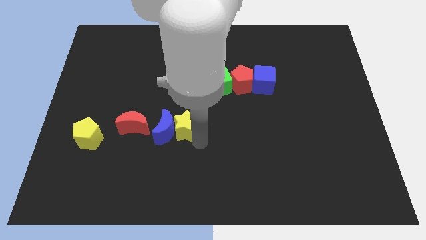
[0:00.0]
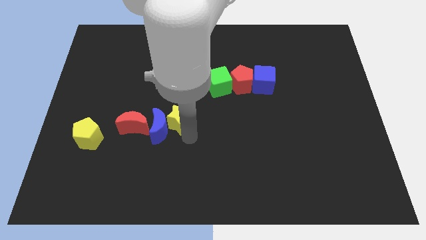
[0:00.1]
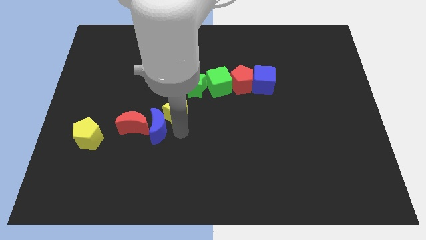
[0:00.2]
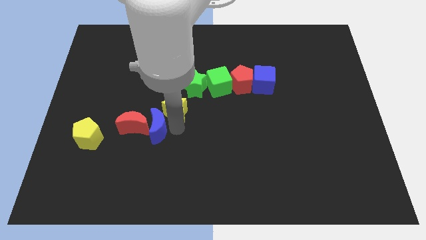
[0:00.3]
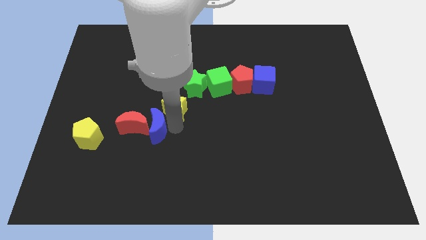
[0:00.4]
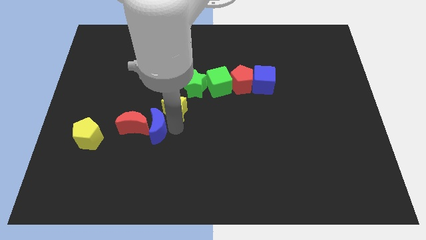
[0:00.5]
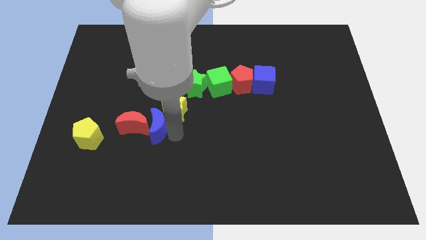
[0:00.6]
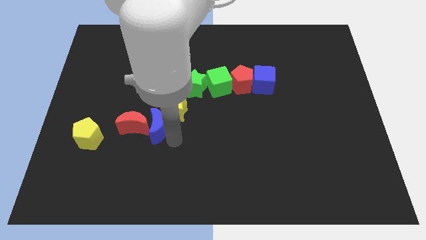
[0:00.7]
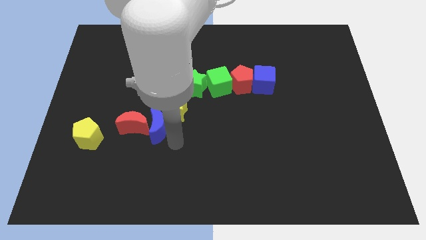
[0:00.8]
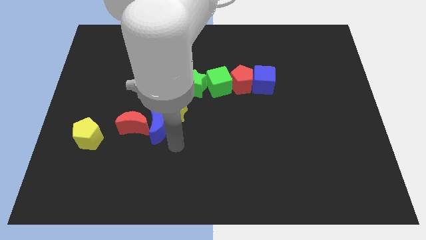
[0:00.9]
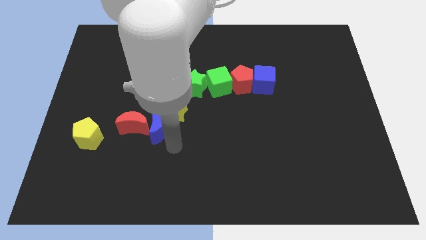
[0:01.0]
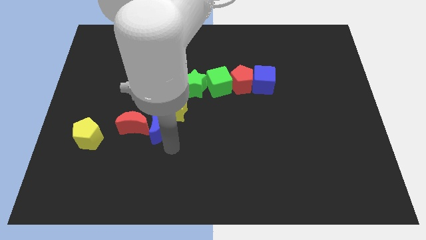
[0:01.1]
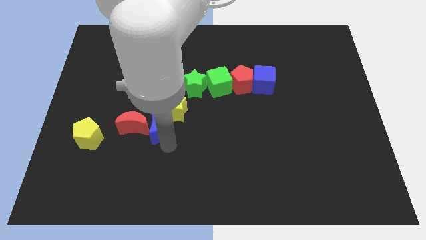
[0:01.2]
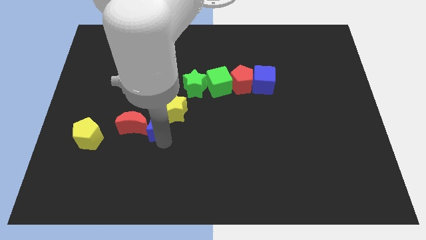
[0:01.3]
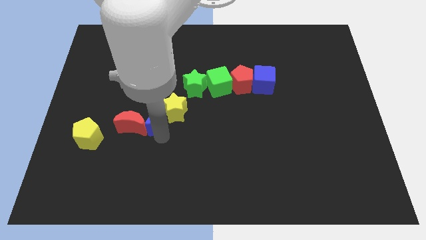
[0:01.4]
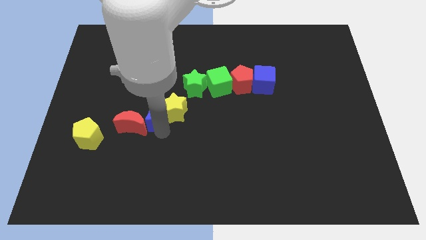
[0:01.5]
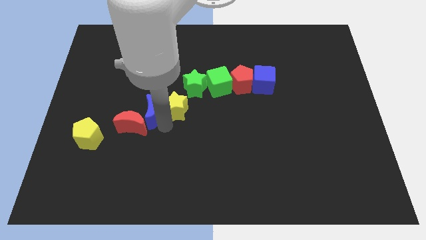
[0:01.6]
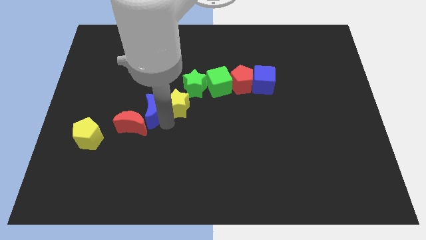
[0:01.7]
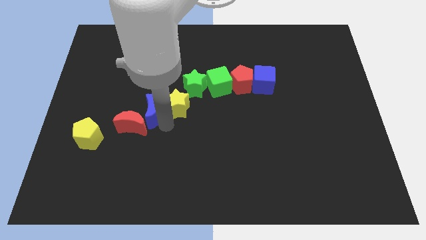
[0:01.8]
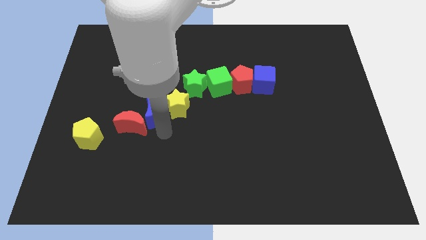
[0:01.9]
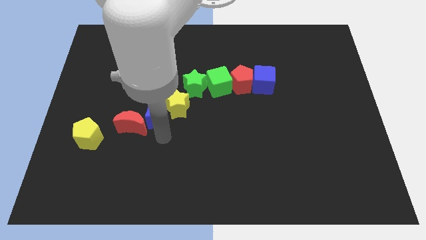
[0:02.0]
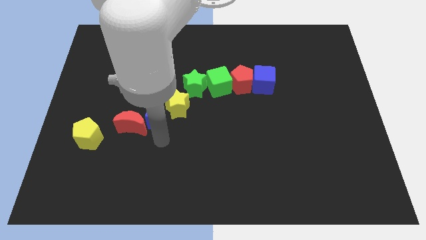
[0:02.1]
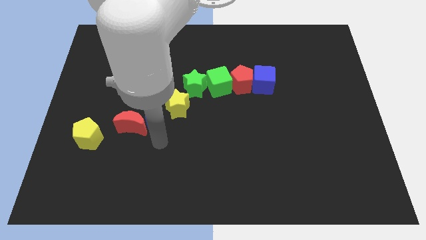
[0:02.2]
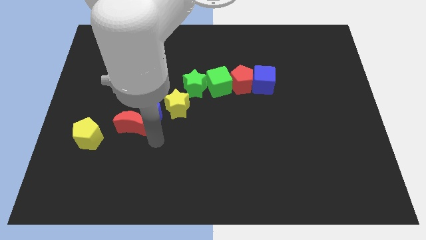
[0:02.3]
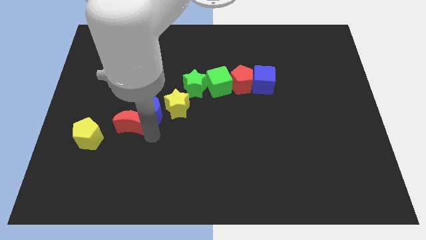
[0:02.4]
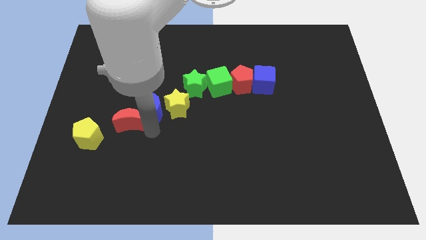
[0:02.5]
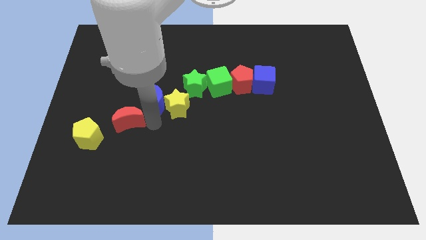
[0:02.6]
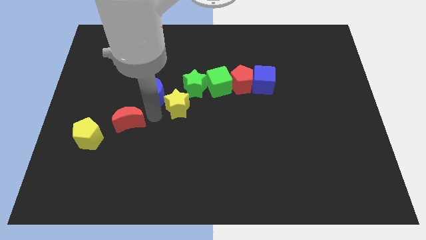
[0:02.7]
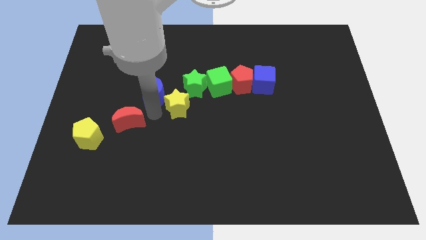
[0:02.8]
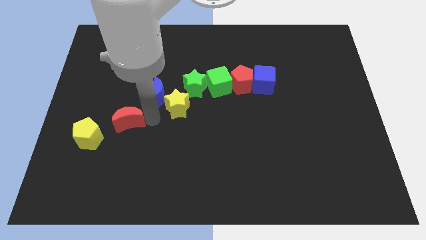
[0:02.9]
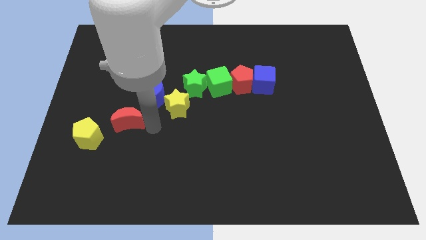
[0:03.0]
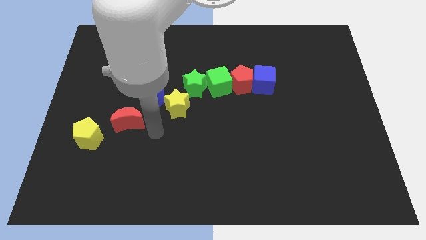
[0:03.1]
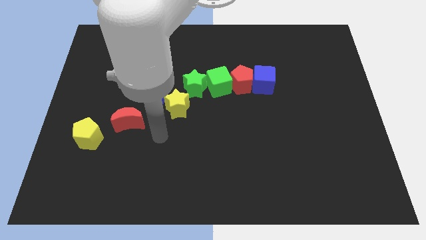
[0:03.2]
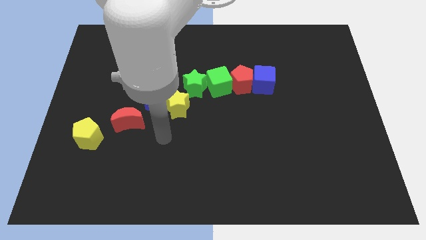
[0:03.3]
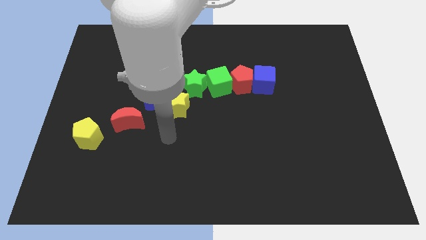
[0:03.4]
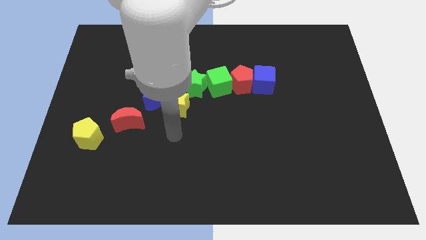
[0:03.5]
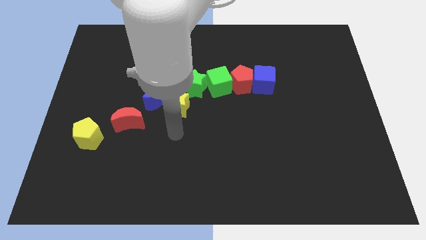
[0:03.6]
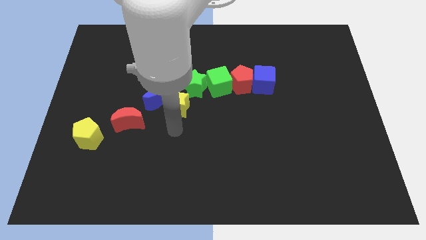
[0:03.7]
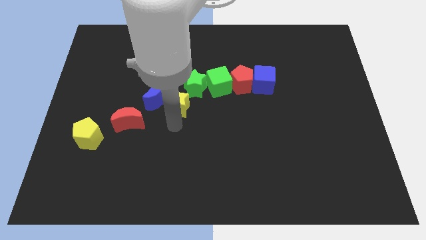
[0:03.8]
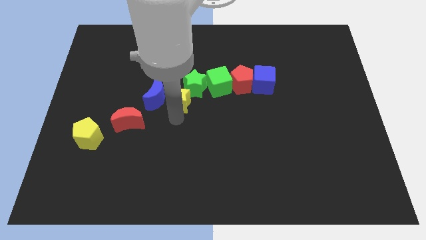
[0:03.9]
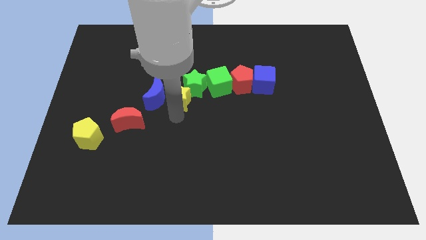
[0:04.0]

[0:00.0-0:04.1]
adjust yellow star and blue moon slightly upwards

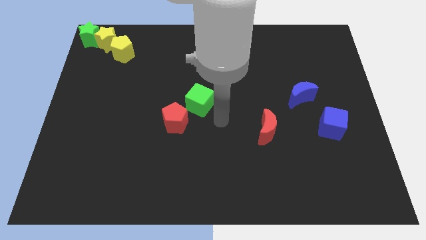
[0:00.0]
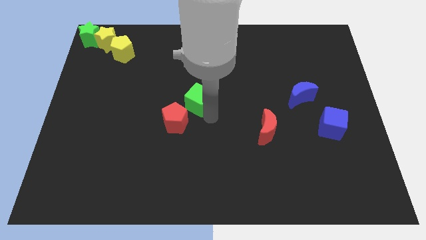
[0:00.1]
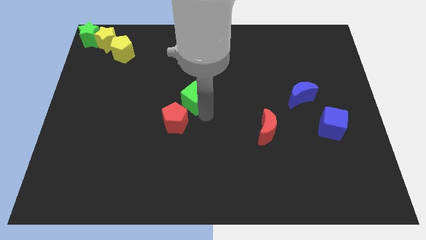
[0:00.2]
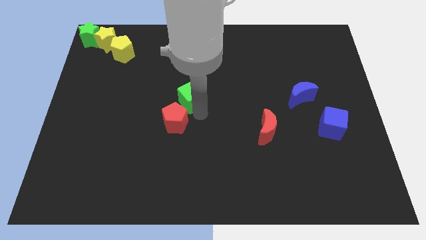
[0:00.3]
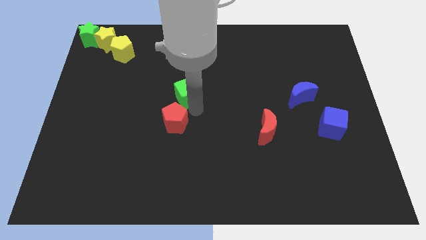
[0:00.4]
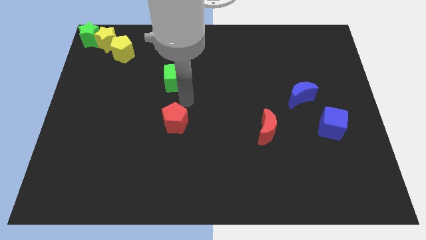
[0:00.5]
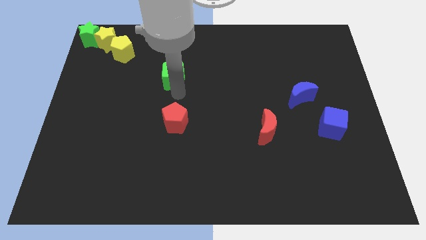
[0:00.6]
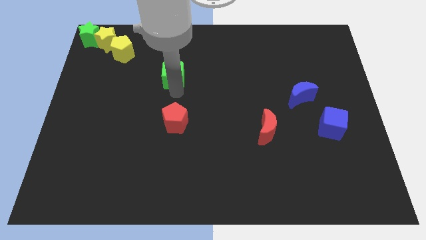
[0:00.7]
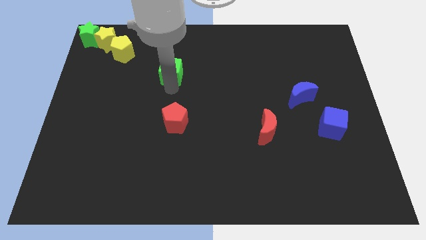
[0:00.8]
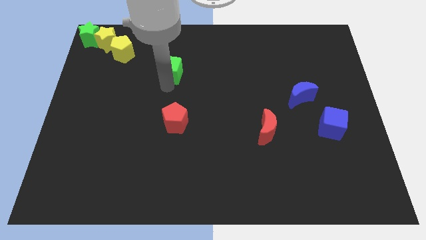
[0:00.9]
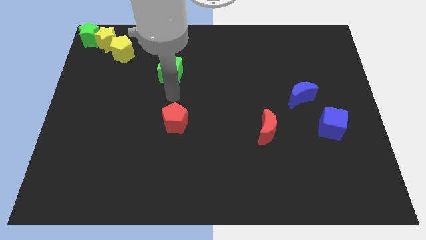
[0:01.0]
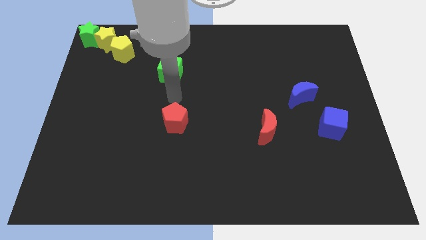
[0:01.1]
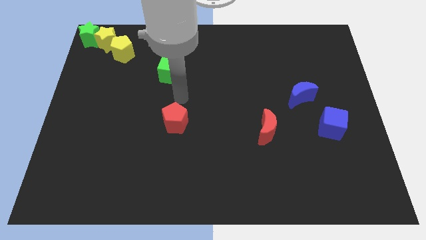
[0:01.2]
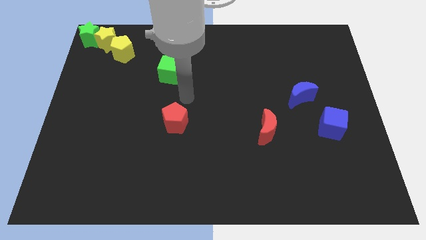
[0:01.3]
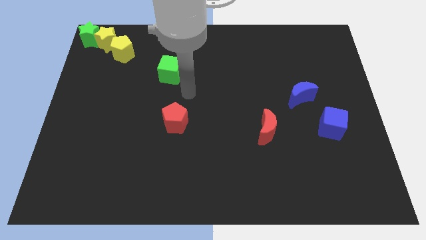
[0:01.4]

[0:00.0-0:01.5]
push the green cube towards the top of red pentagon

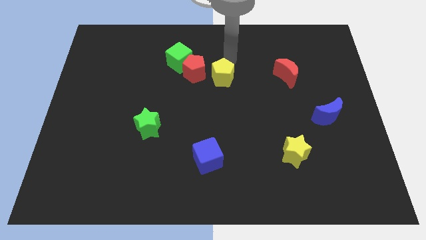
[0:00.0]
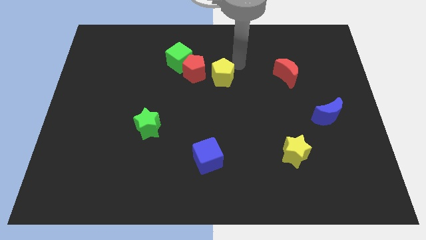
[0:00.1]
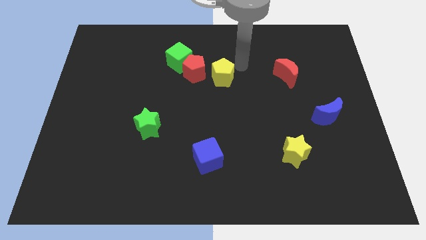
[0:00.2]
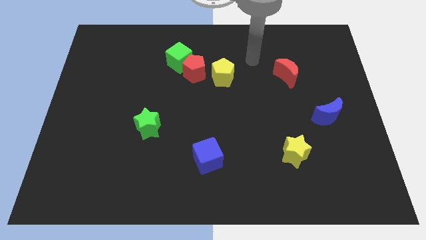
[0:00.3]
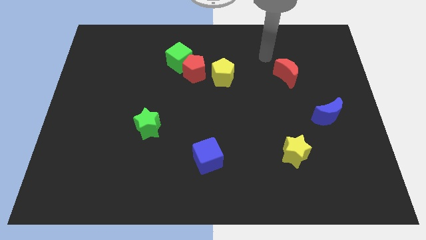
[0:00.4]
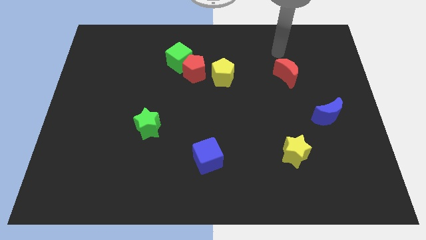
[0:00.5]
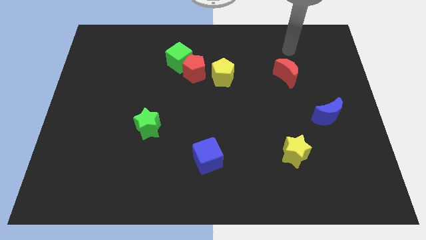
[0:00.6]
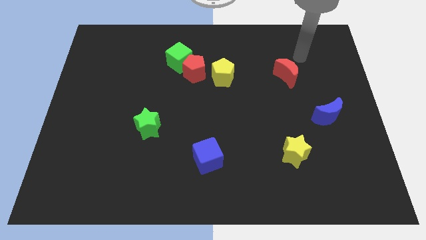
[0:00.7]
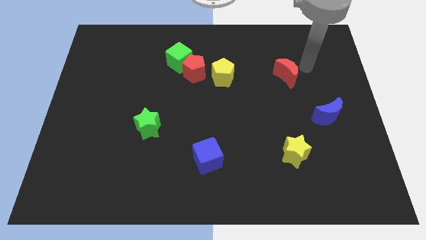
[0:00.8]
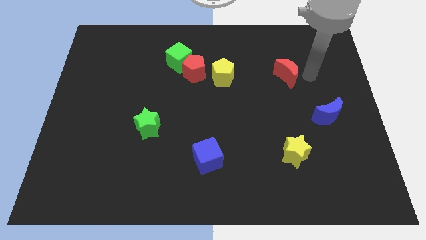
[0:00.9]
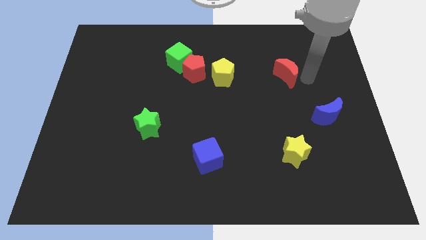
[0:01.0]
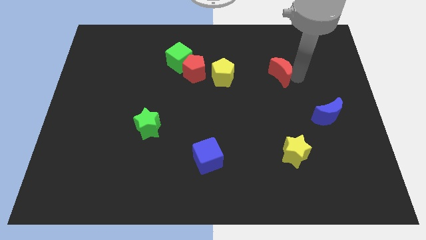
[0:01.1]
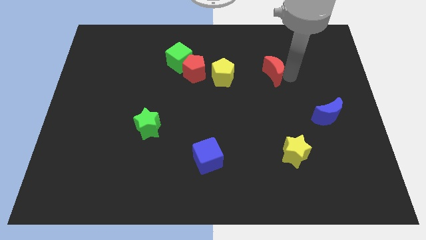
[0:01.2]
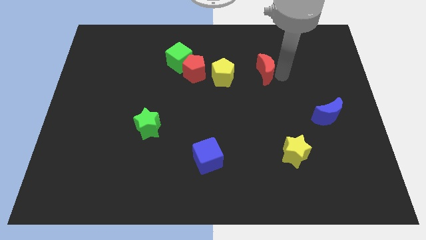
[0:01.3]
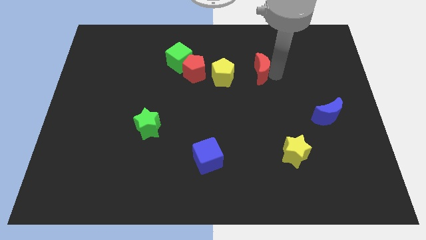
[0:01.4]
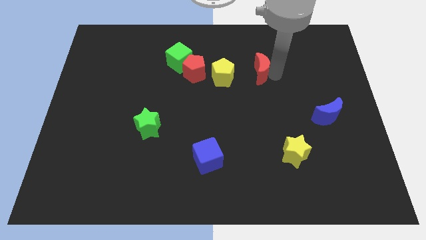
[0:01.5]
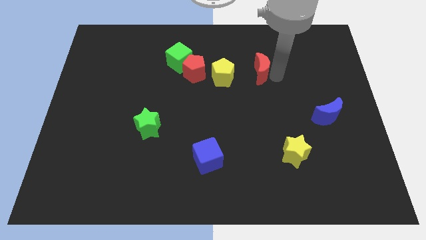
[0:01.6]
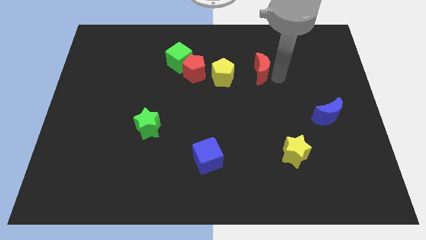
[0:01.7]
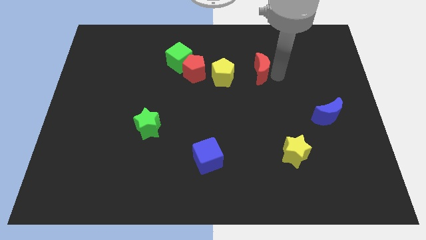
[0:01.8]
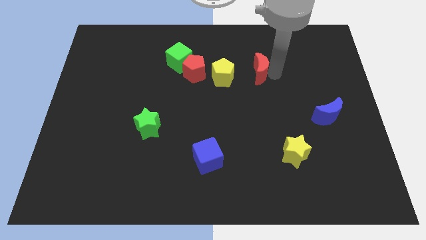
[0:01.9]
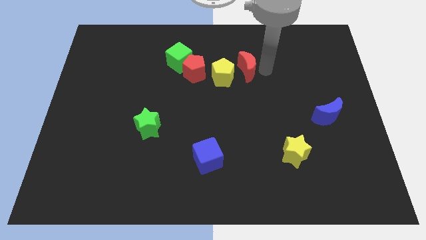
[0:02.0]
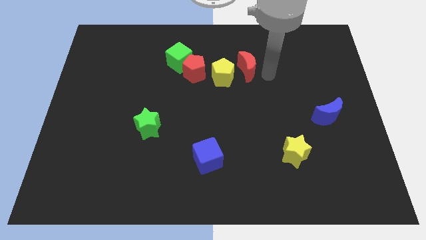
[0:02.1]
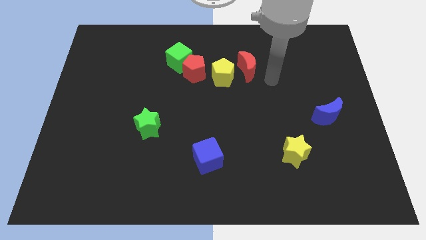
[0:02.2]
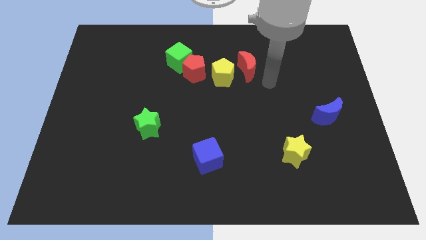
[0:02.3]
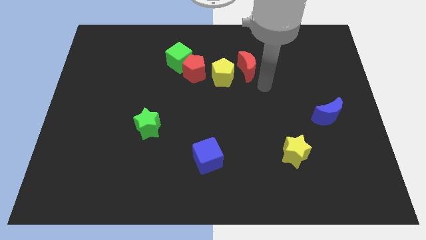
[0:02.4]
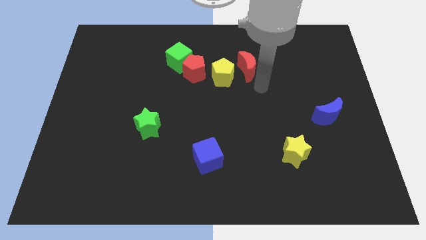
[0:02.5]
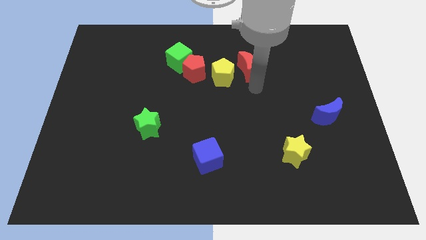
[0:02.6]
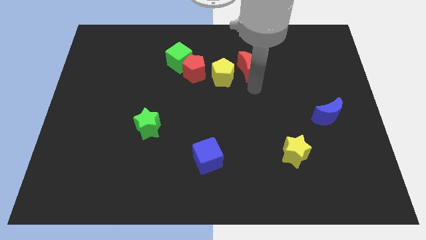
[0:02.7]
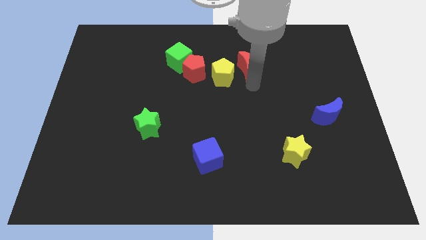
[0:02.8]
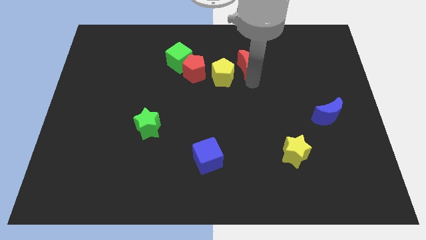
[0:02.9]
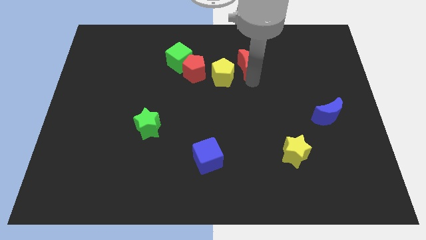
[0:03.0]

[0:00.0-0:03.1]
move the red moon near the yellow pentagon
